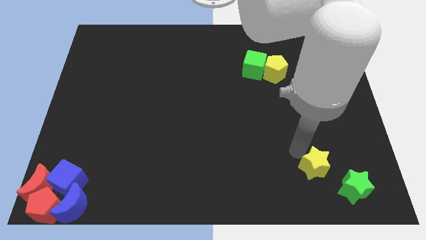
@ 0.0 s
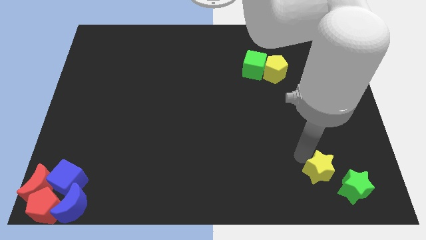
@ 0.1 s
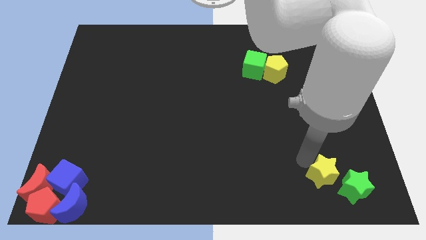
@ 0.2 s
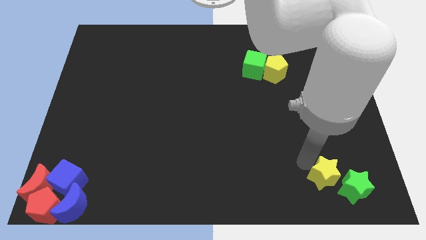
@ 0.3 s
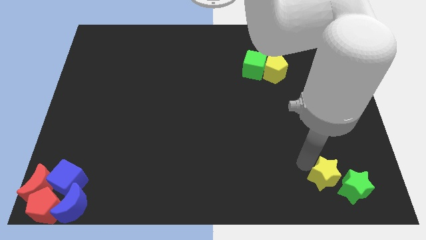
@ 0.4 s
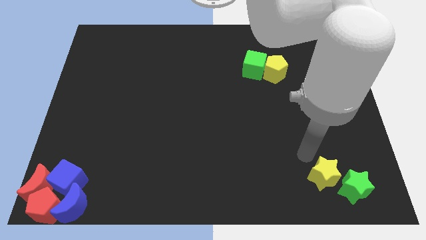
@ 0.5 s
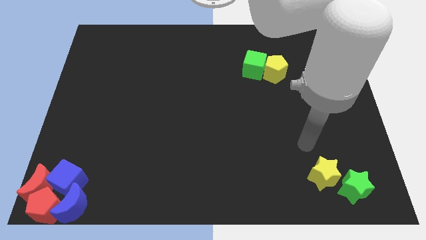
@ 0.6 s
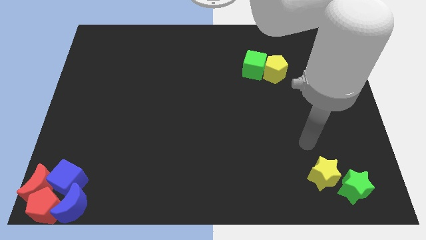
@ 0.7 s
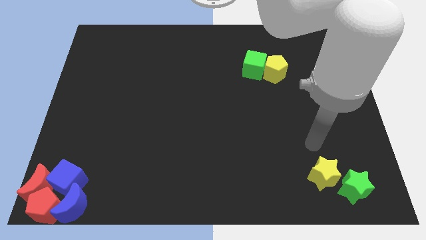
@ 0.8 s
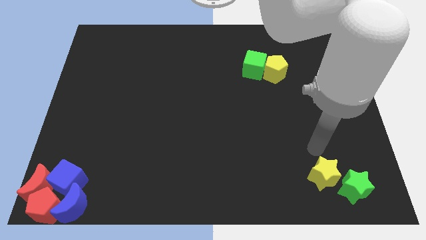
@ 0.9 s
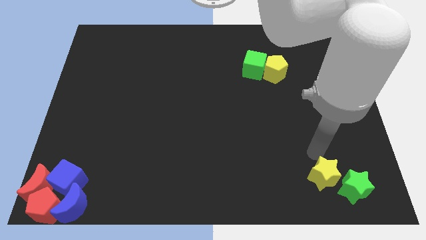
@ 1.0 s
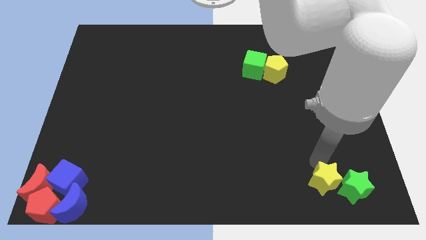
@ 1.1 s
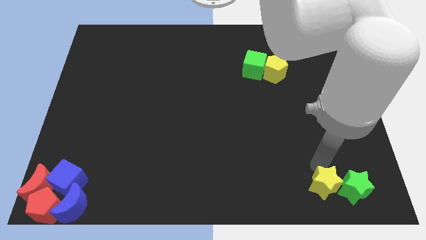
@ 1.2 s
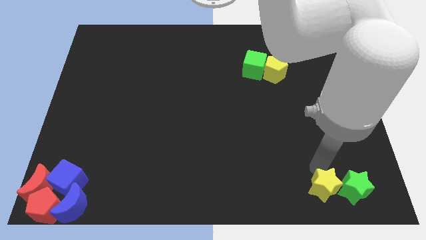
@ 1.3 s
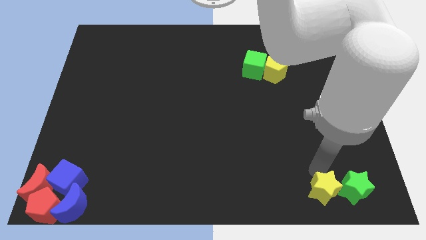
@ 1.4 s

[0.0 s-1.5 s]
place the yellow star to the left of the green star

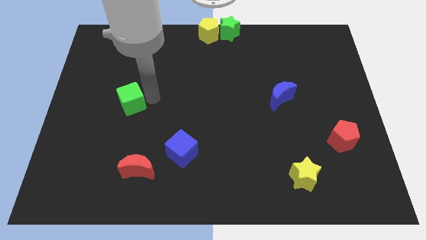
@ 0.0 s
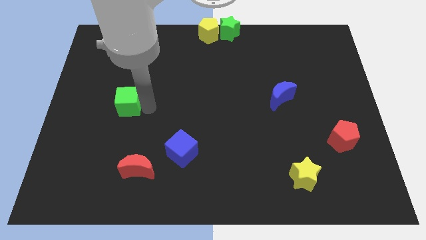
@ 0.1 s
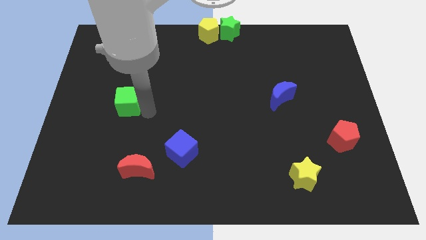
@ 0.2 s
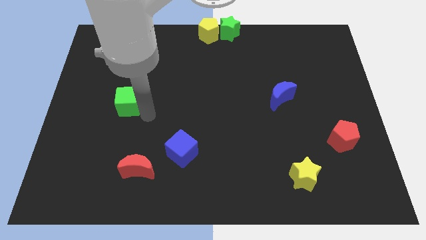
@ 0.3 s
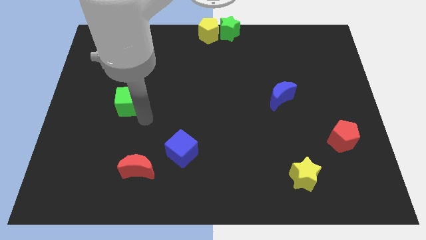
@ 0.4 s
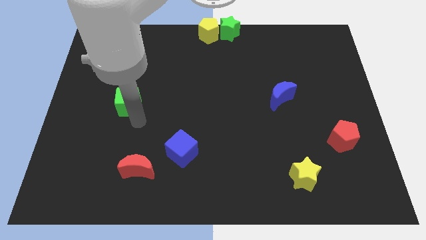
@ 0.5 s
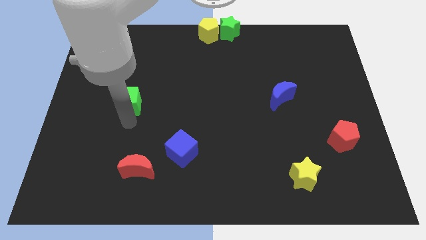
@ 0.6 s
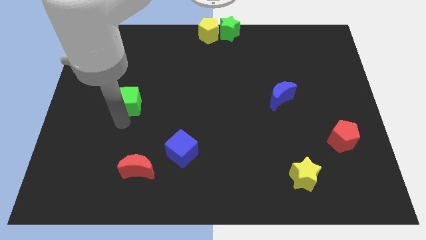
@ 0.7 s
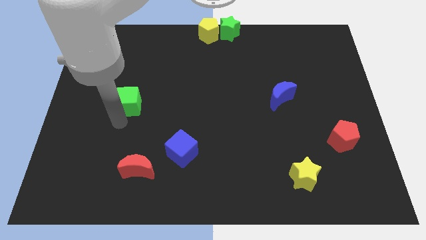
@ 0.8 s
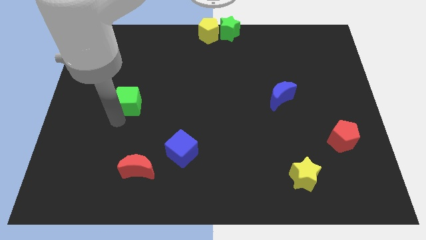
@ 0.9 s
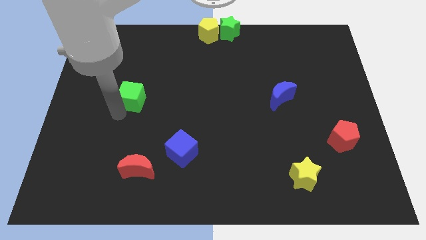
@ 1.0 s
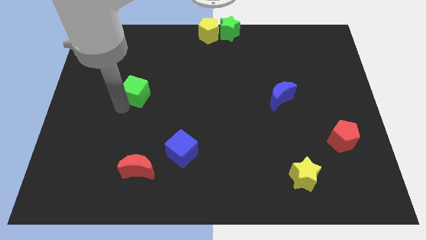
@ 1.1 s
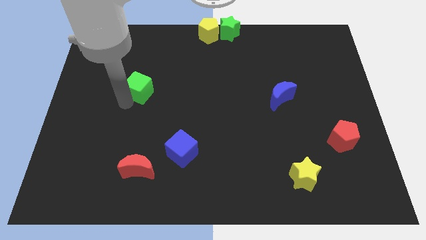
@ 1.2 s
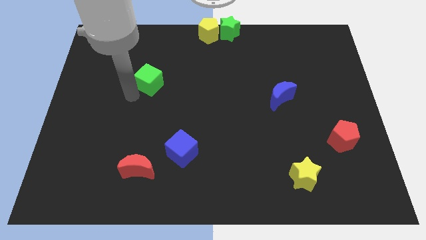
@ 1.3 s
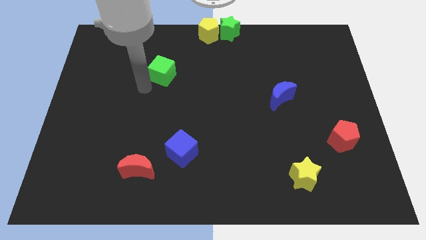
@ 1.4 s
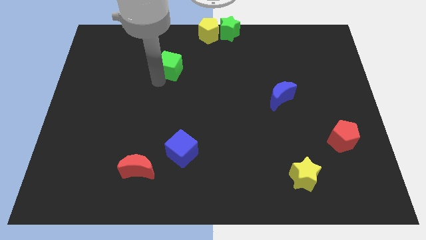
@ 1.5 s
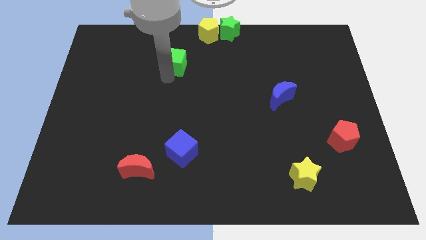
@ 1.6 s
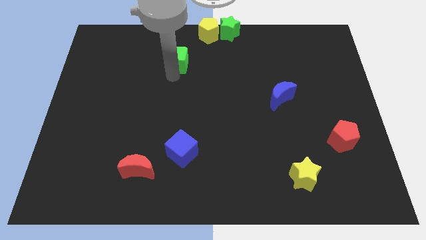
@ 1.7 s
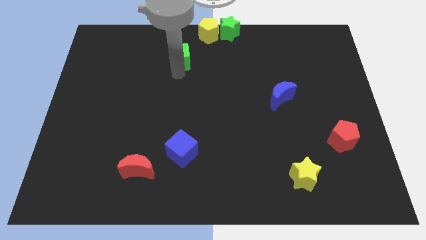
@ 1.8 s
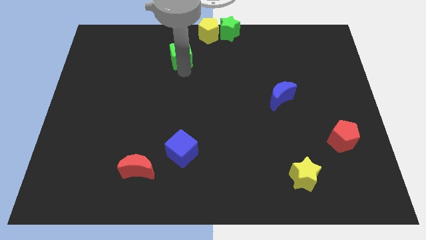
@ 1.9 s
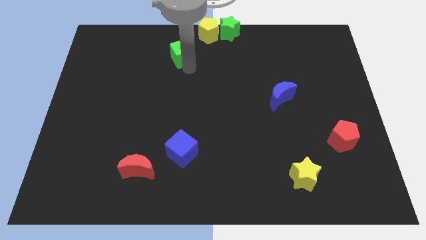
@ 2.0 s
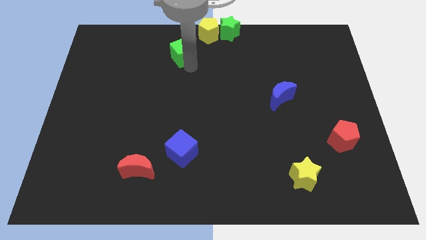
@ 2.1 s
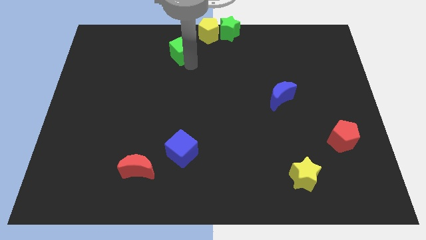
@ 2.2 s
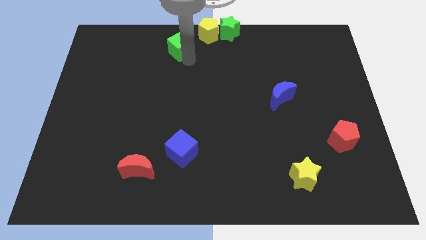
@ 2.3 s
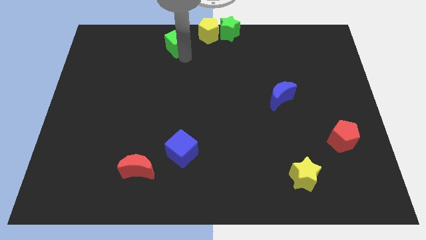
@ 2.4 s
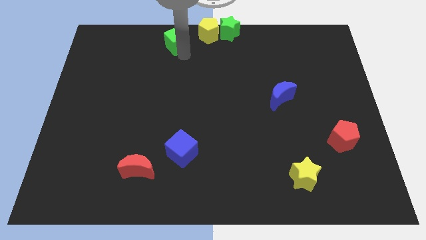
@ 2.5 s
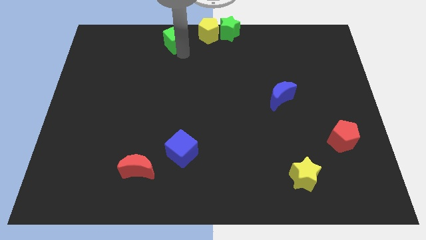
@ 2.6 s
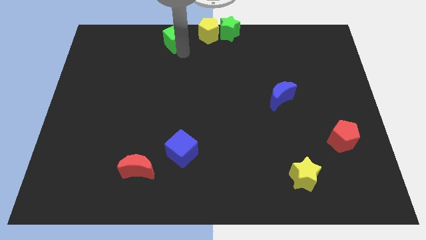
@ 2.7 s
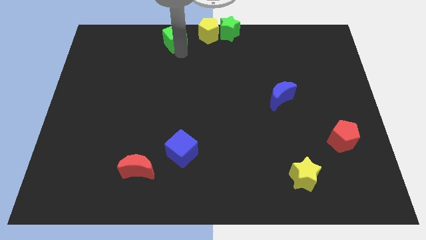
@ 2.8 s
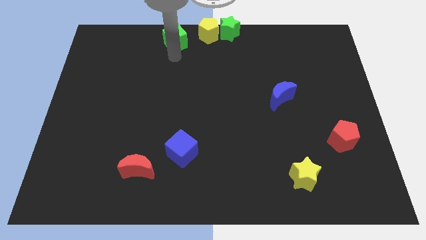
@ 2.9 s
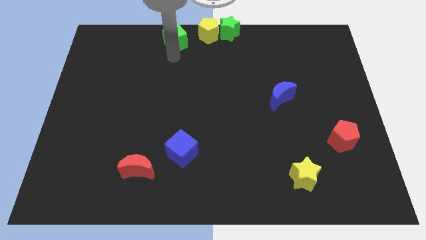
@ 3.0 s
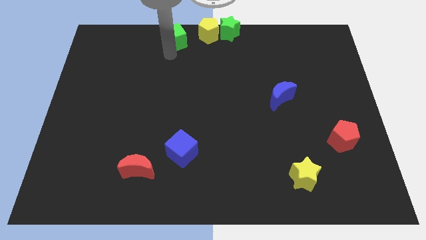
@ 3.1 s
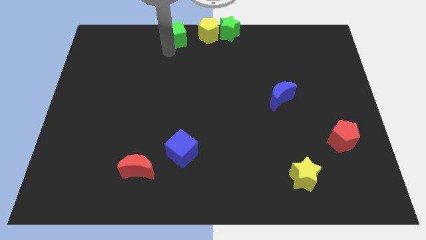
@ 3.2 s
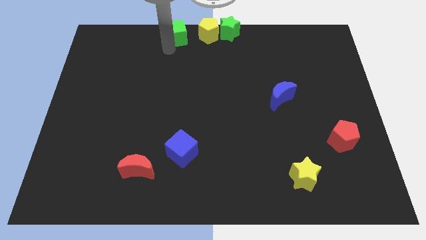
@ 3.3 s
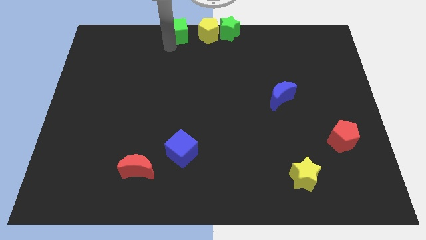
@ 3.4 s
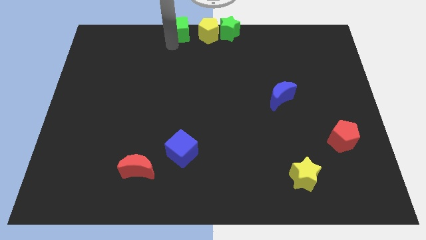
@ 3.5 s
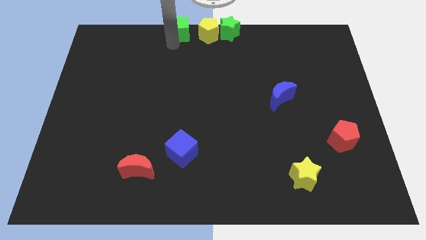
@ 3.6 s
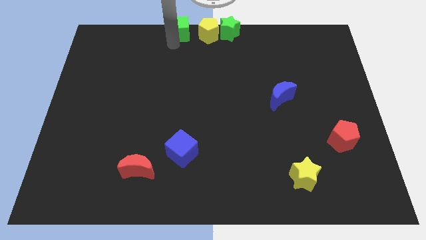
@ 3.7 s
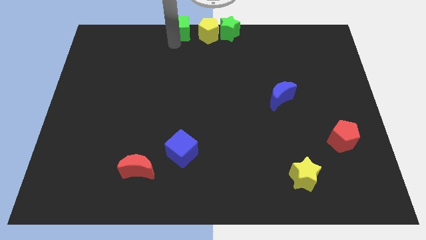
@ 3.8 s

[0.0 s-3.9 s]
place green cube to the left of yellow pentagon

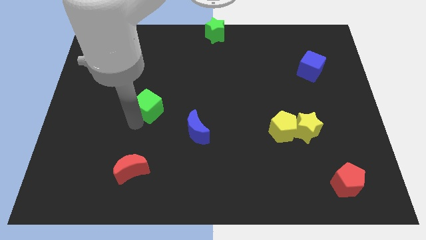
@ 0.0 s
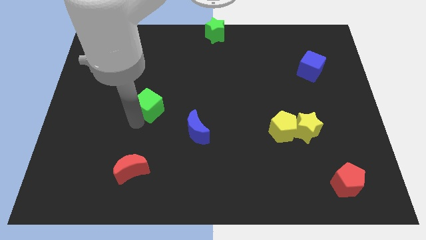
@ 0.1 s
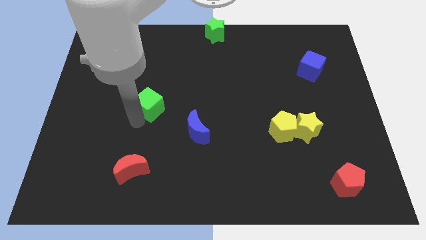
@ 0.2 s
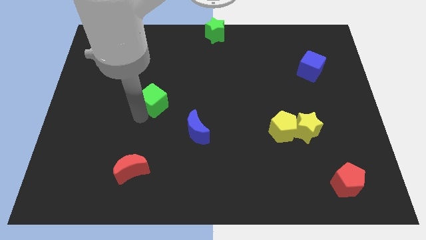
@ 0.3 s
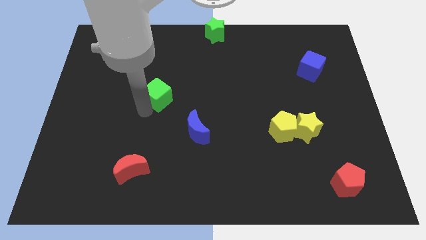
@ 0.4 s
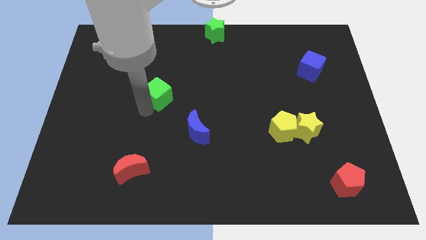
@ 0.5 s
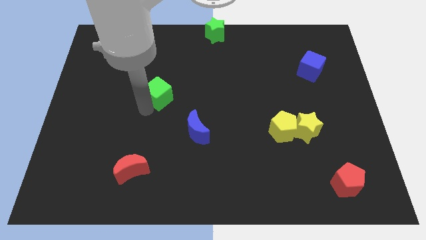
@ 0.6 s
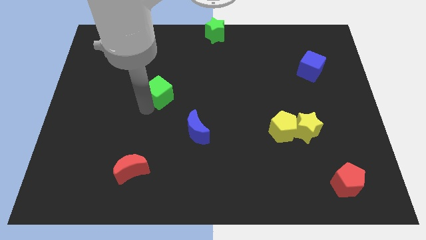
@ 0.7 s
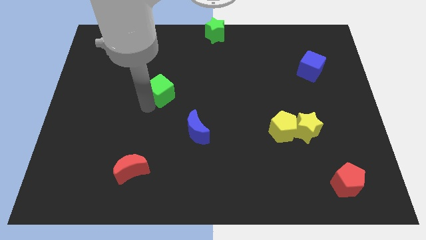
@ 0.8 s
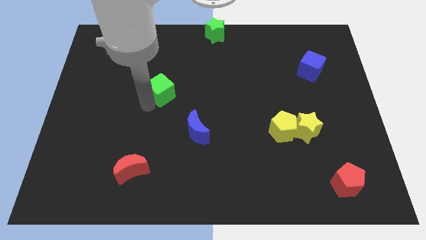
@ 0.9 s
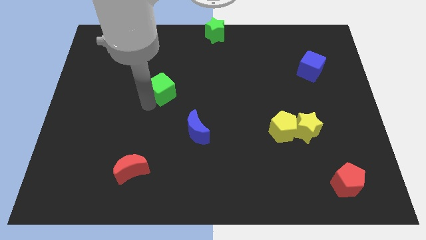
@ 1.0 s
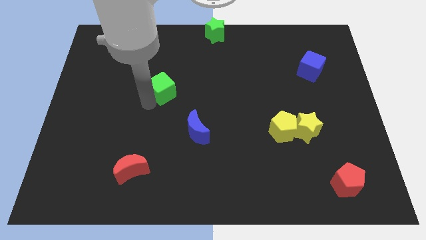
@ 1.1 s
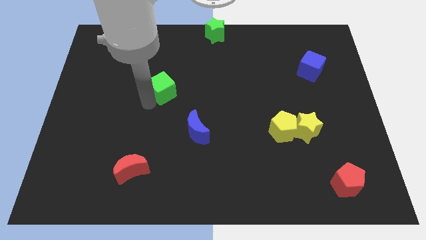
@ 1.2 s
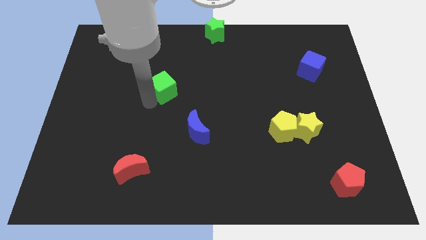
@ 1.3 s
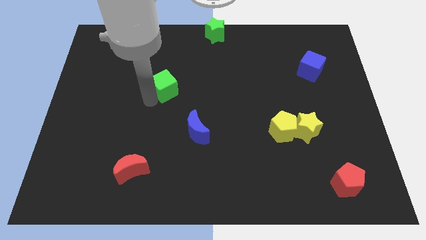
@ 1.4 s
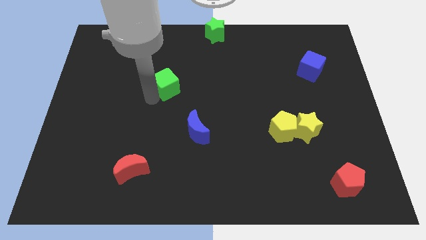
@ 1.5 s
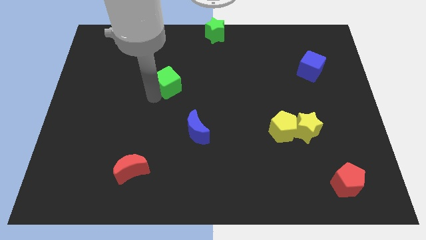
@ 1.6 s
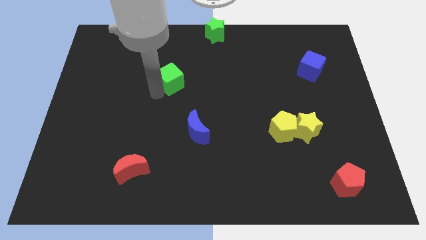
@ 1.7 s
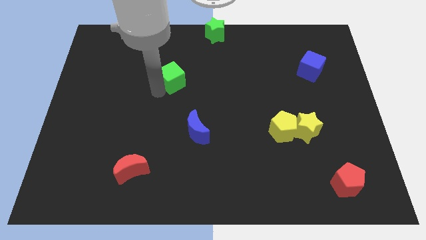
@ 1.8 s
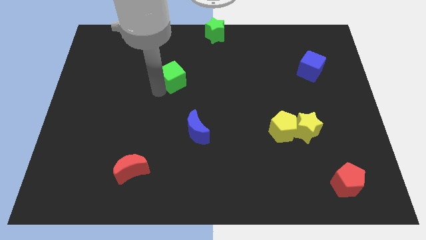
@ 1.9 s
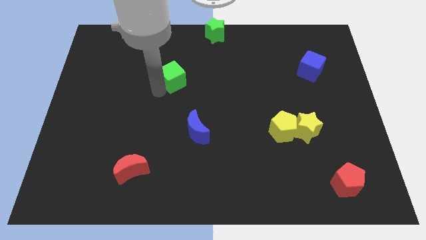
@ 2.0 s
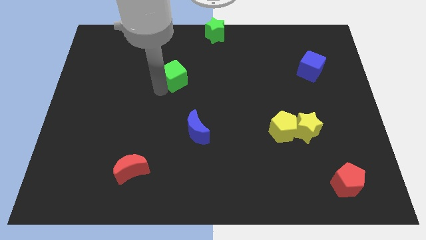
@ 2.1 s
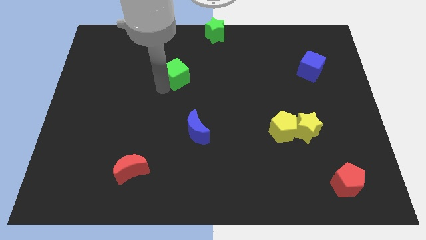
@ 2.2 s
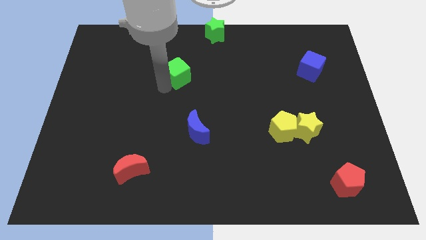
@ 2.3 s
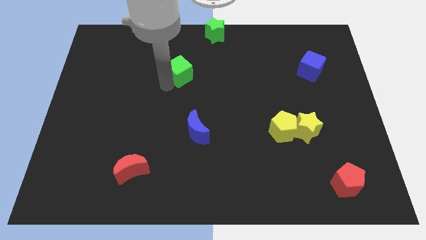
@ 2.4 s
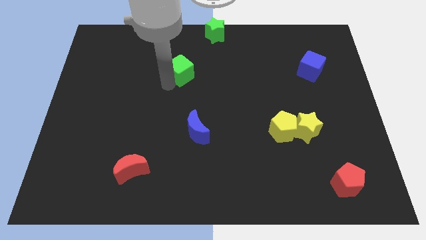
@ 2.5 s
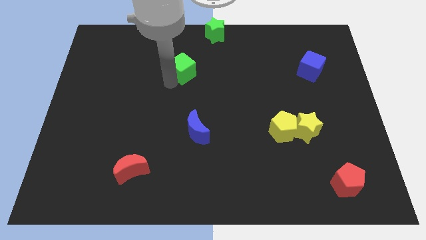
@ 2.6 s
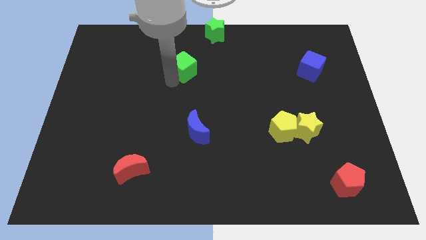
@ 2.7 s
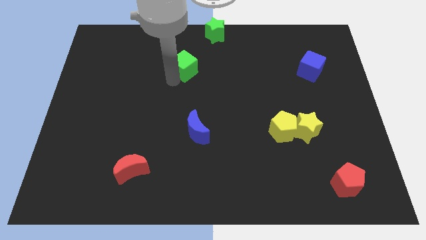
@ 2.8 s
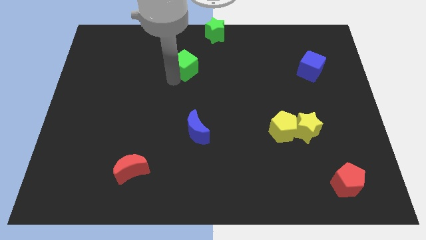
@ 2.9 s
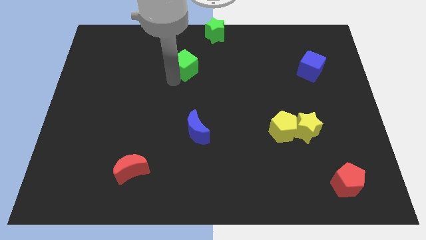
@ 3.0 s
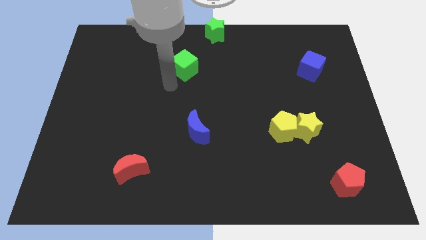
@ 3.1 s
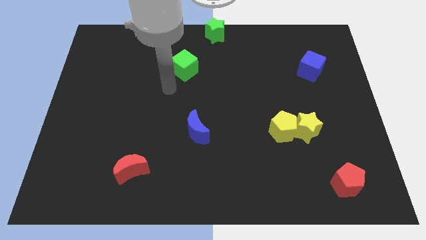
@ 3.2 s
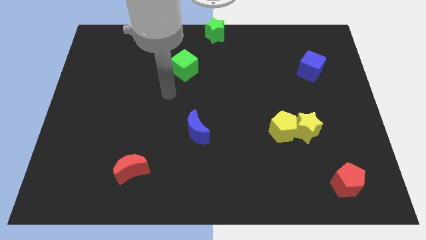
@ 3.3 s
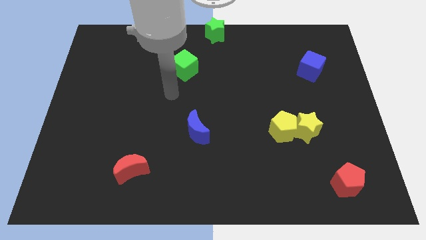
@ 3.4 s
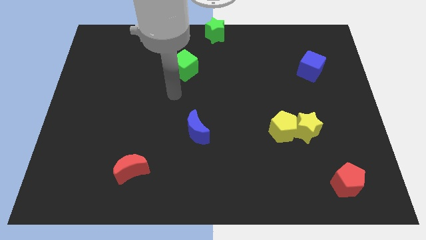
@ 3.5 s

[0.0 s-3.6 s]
push green cube above blue crescent
